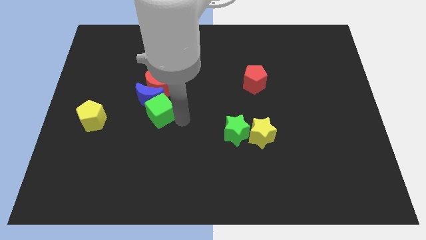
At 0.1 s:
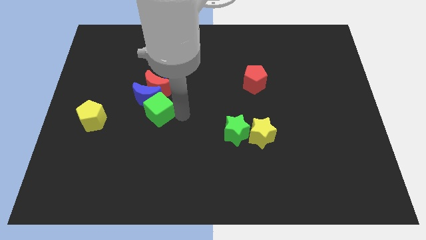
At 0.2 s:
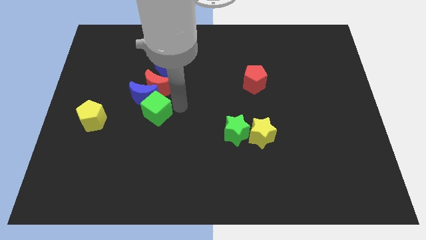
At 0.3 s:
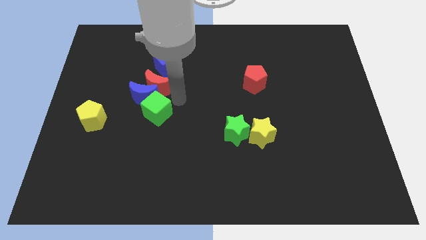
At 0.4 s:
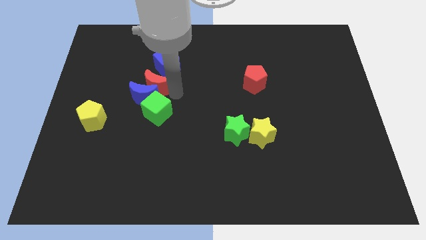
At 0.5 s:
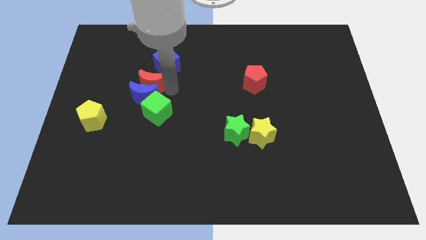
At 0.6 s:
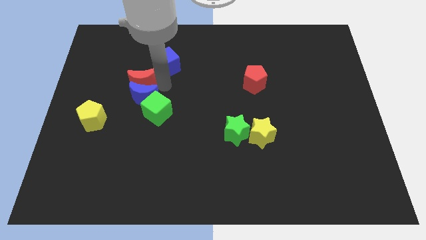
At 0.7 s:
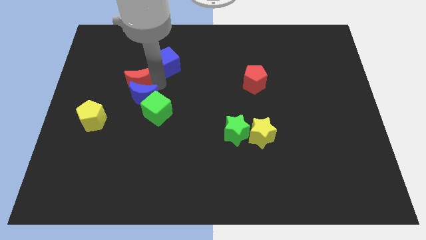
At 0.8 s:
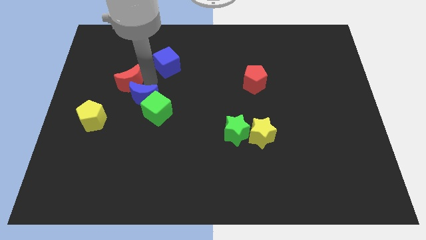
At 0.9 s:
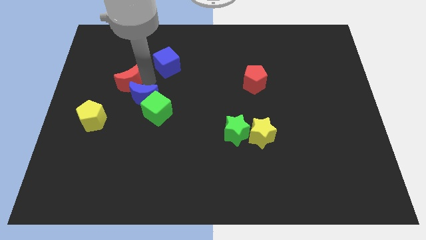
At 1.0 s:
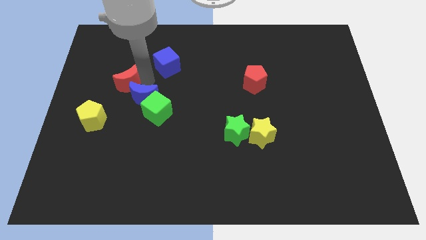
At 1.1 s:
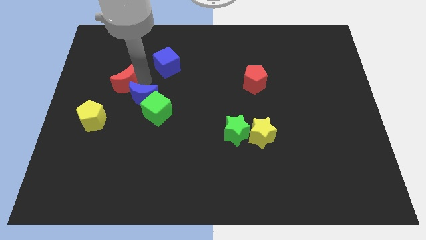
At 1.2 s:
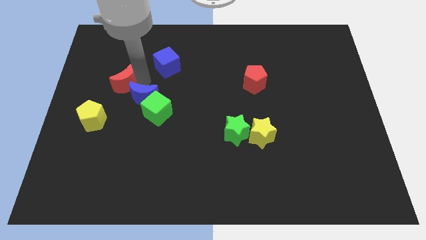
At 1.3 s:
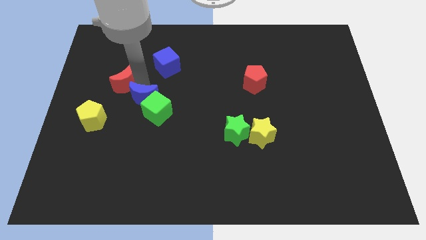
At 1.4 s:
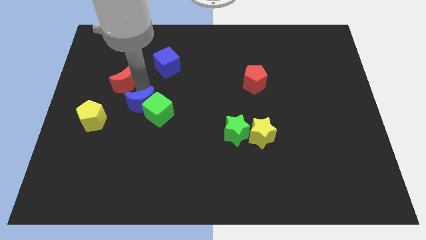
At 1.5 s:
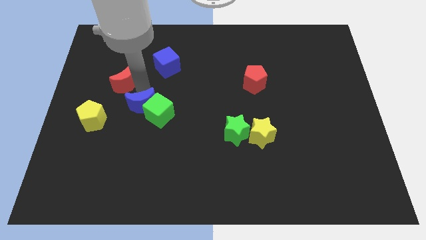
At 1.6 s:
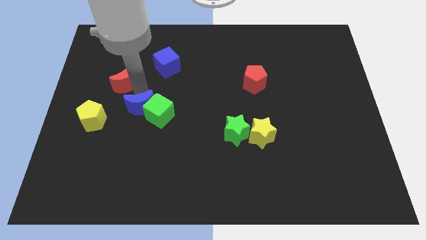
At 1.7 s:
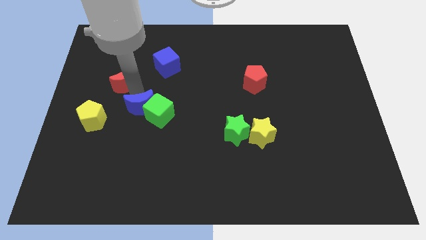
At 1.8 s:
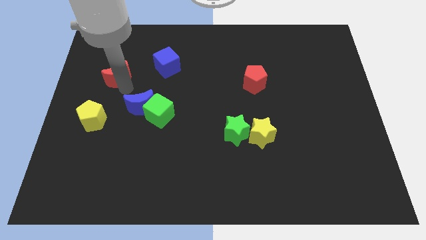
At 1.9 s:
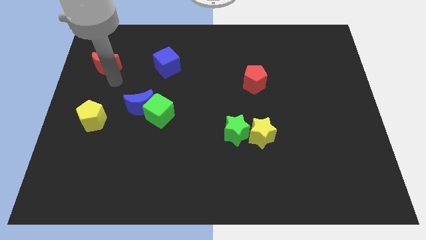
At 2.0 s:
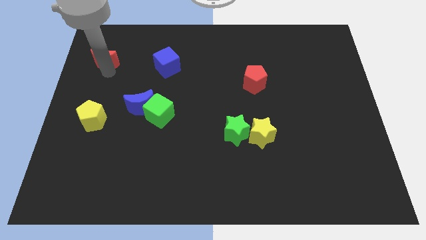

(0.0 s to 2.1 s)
separate the red moon and blue moon

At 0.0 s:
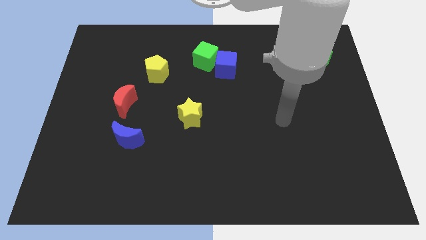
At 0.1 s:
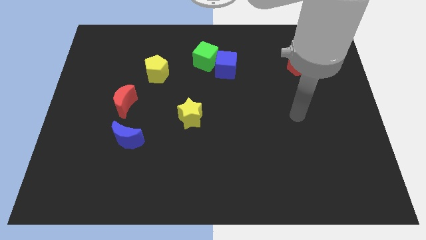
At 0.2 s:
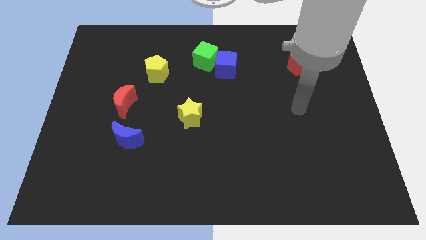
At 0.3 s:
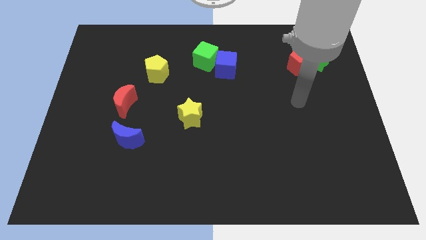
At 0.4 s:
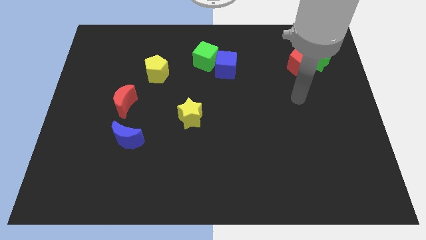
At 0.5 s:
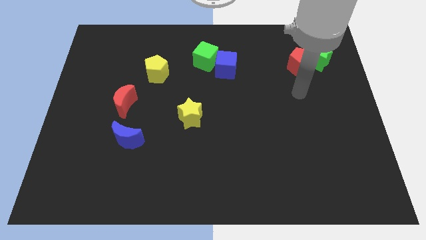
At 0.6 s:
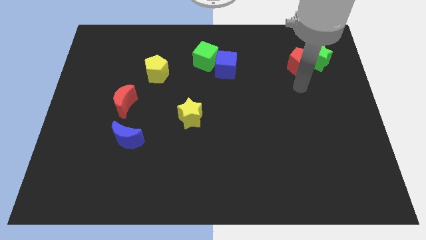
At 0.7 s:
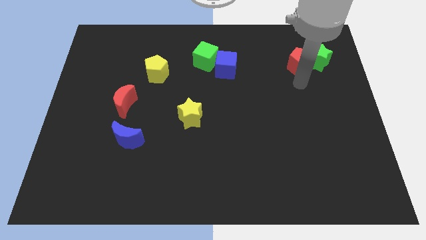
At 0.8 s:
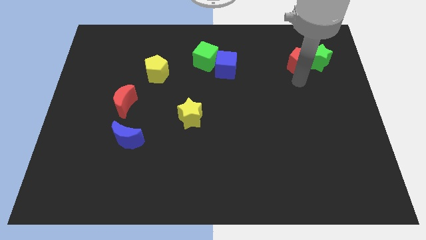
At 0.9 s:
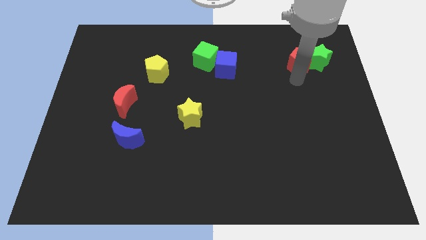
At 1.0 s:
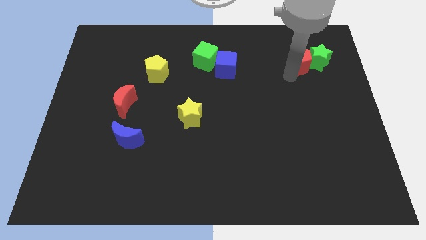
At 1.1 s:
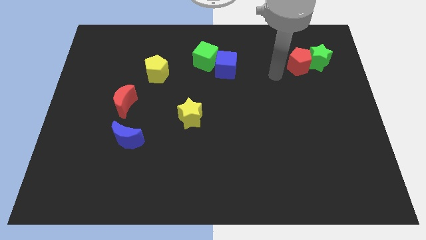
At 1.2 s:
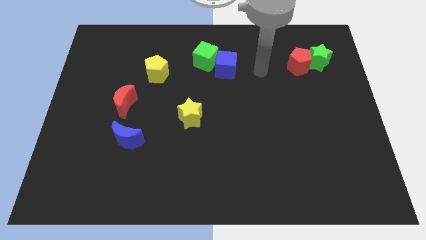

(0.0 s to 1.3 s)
move your arm close to the red pentagon

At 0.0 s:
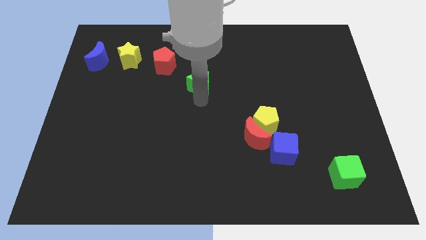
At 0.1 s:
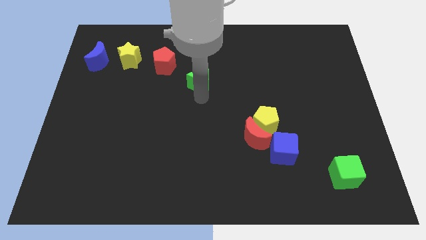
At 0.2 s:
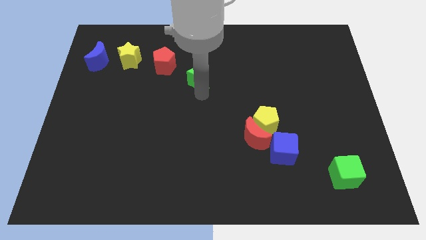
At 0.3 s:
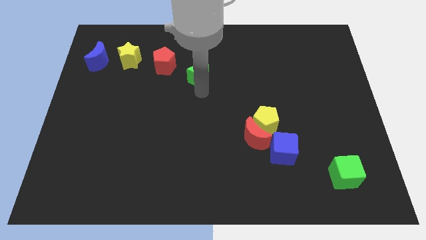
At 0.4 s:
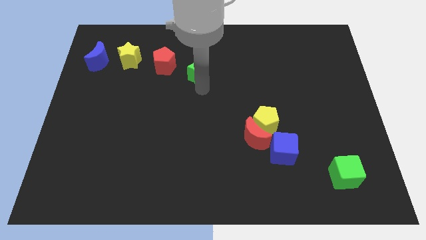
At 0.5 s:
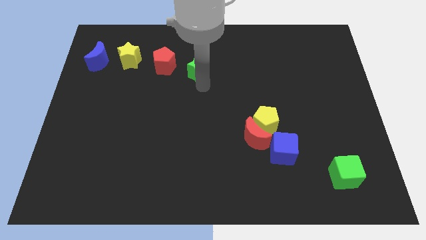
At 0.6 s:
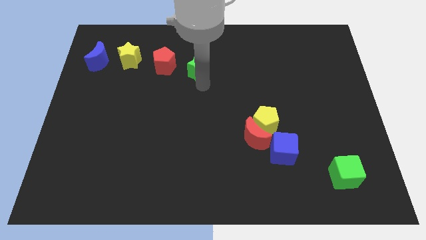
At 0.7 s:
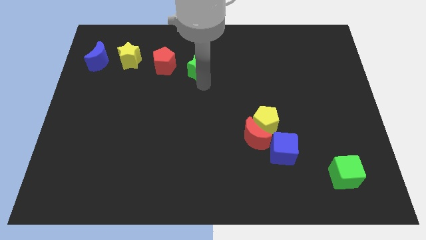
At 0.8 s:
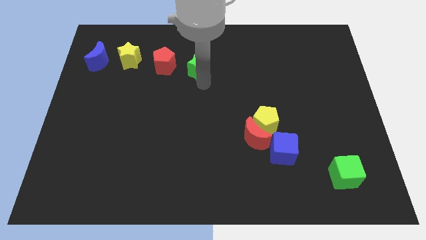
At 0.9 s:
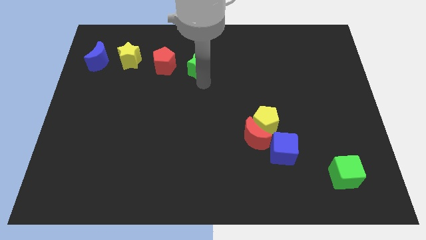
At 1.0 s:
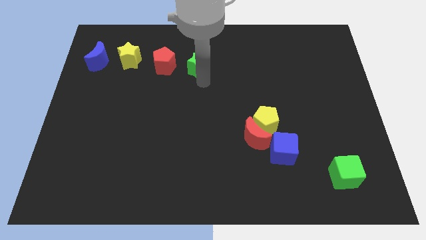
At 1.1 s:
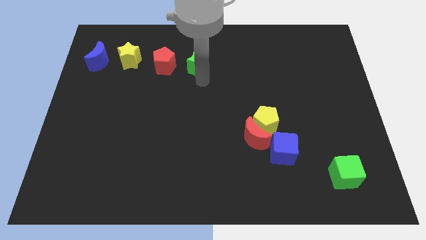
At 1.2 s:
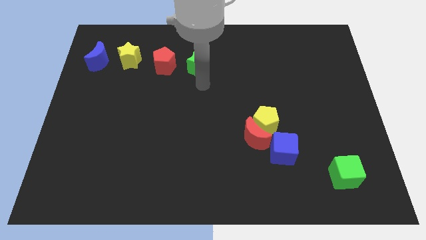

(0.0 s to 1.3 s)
push the green star towards the red pentagon

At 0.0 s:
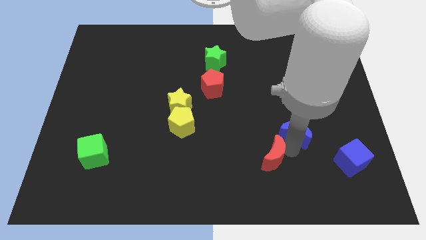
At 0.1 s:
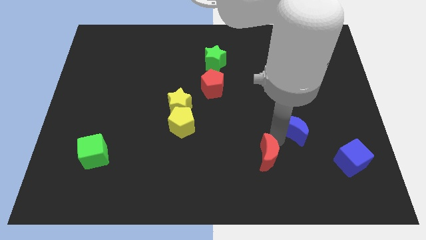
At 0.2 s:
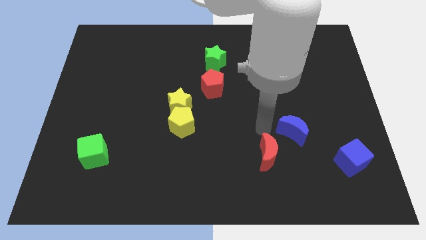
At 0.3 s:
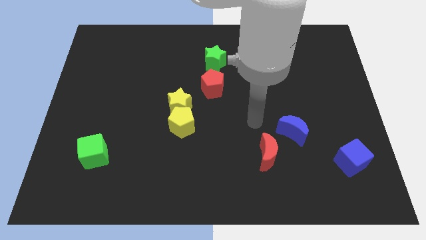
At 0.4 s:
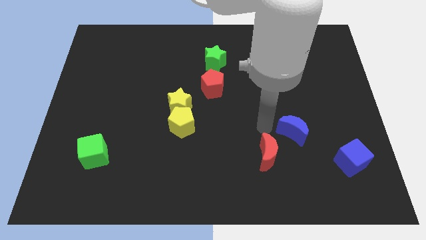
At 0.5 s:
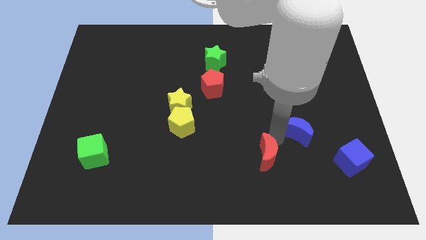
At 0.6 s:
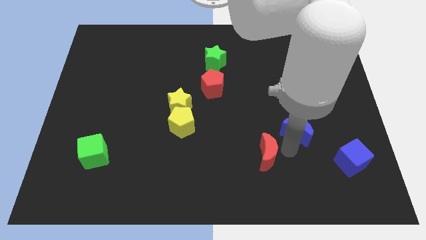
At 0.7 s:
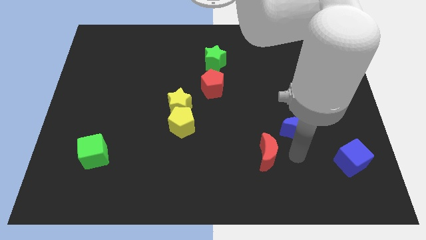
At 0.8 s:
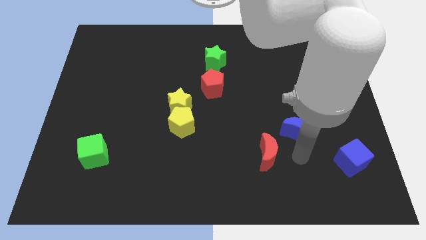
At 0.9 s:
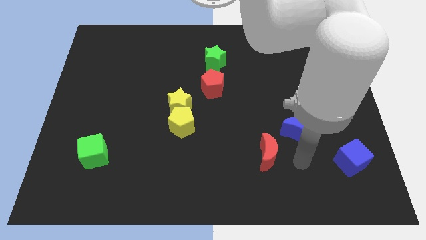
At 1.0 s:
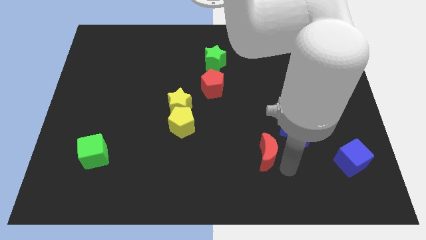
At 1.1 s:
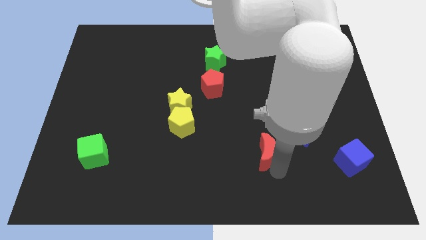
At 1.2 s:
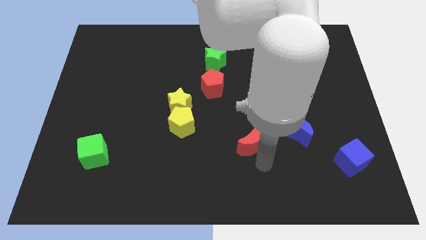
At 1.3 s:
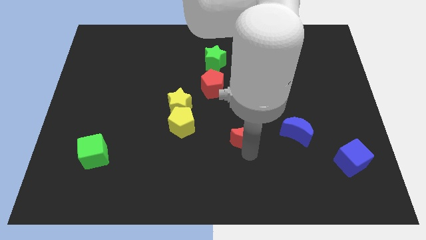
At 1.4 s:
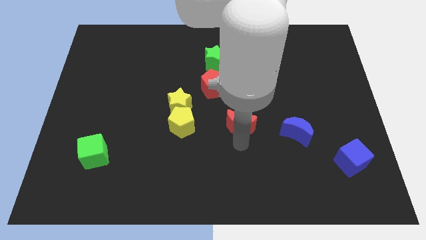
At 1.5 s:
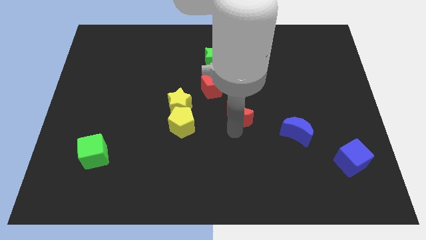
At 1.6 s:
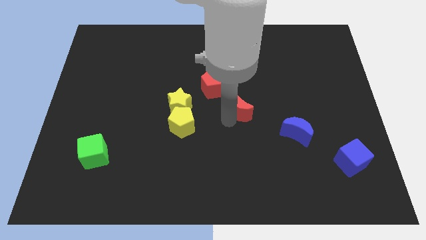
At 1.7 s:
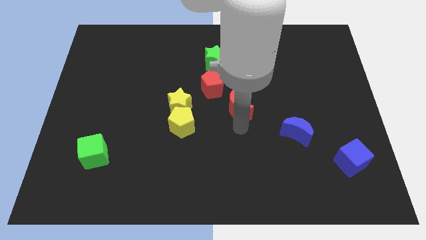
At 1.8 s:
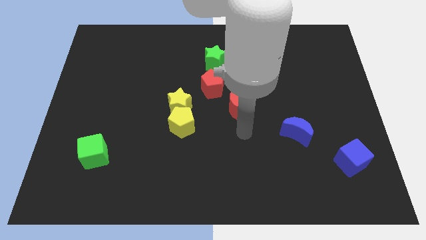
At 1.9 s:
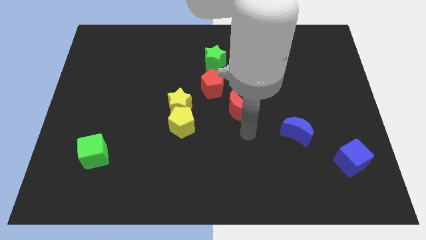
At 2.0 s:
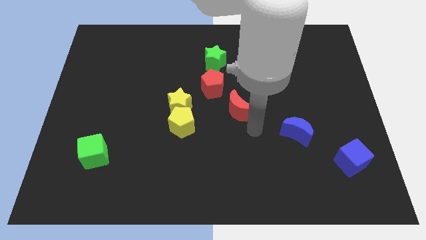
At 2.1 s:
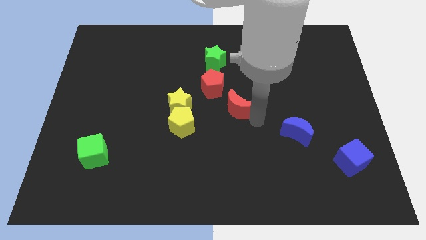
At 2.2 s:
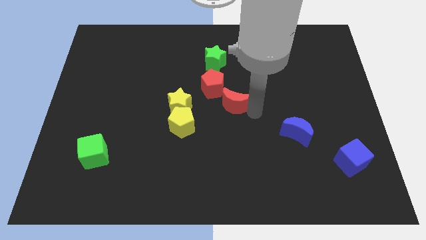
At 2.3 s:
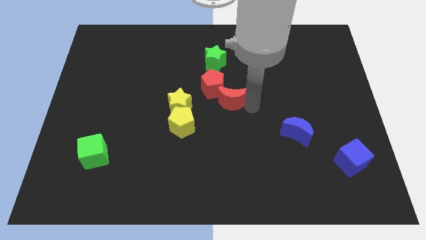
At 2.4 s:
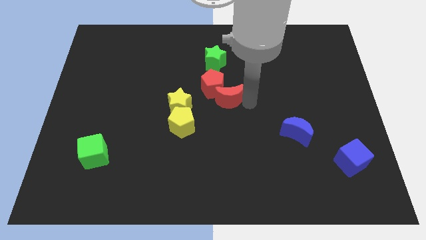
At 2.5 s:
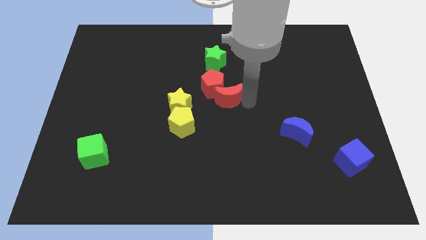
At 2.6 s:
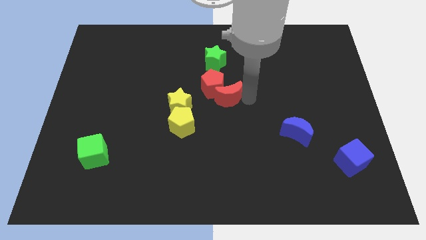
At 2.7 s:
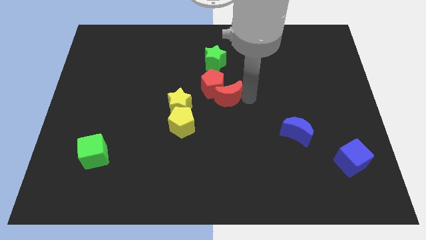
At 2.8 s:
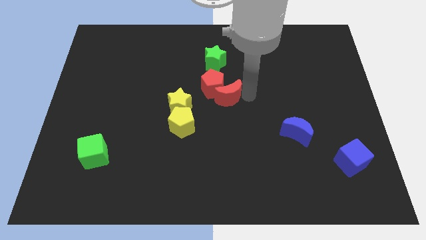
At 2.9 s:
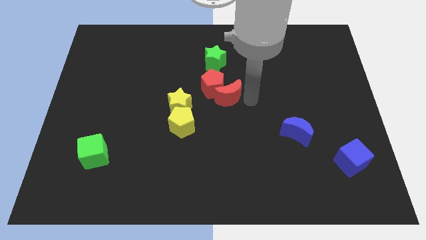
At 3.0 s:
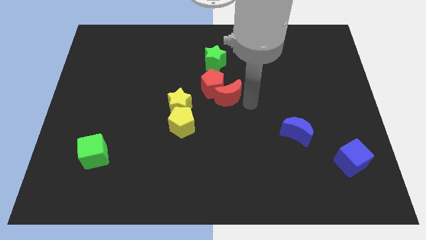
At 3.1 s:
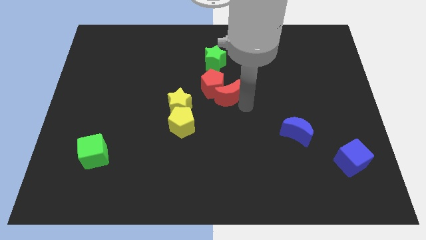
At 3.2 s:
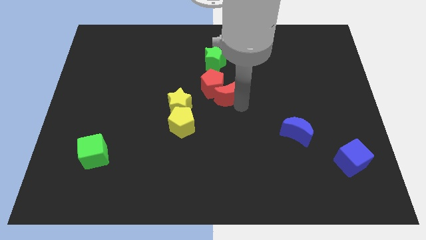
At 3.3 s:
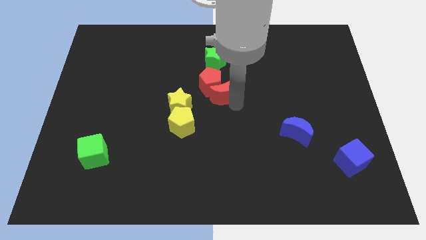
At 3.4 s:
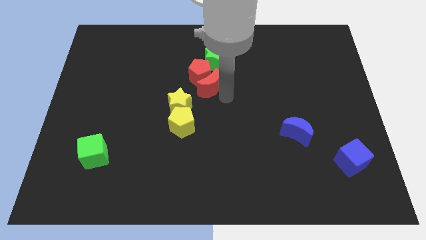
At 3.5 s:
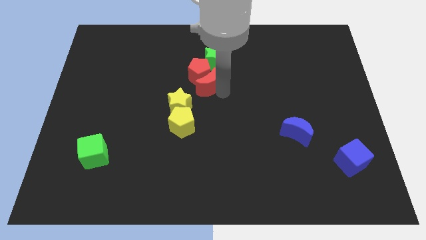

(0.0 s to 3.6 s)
push the red moon into the red pentagon

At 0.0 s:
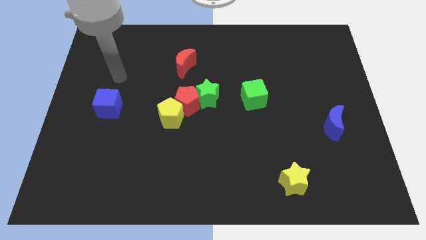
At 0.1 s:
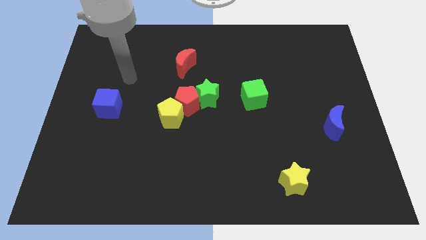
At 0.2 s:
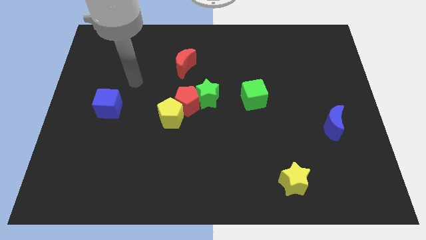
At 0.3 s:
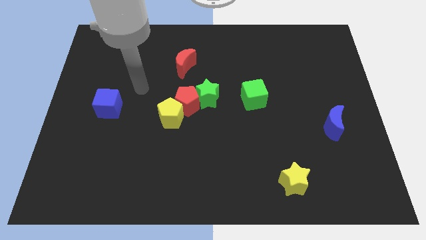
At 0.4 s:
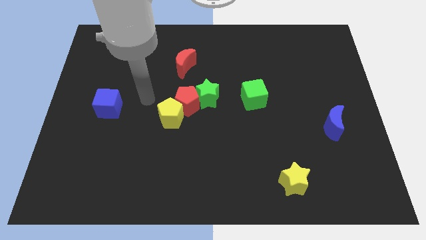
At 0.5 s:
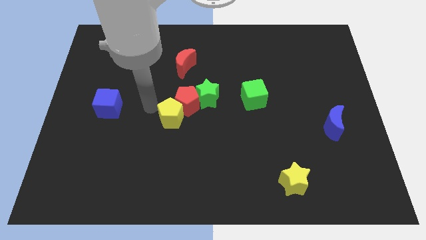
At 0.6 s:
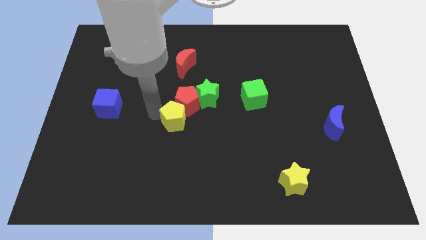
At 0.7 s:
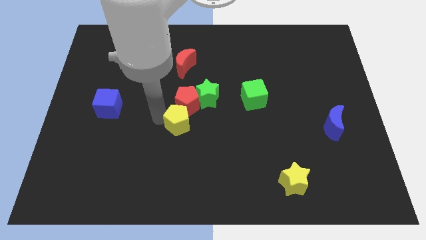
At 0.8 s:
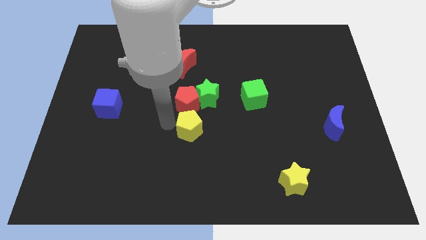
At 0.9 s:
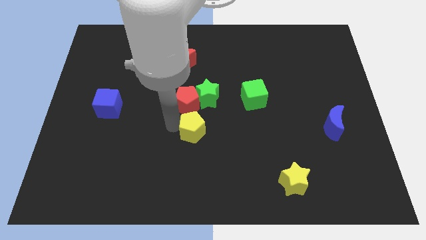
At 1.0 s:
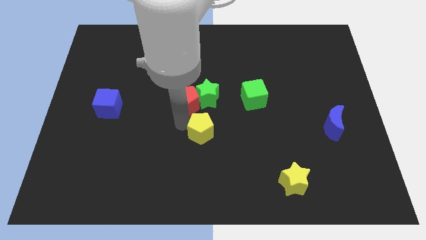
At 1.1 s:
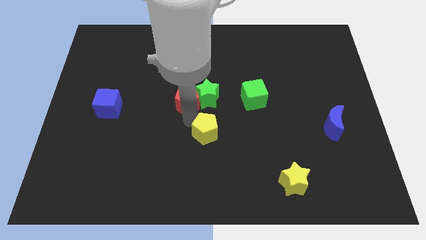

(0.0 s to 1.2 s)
push the yellow pentagon below the green star
